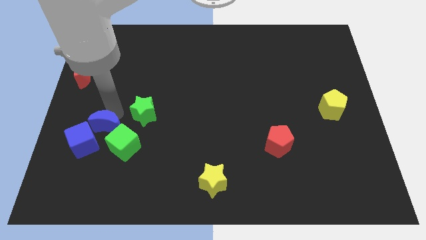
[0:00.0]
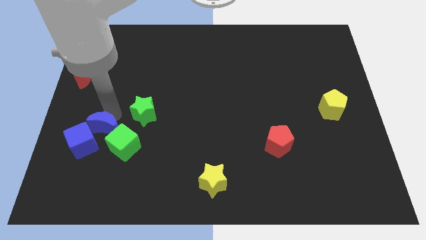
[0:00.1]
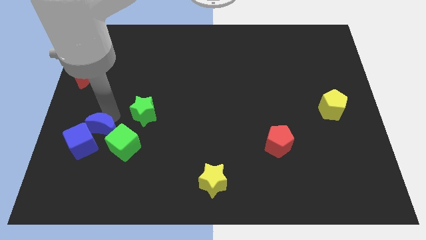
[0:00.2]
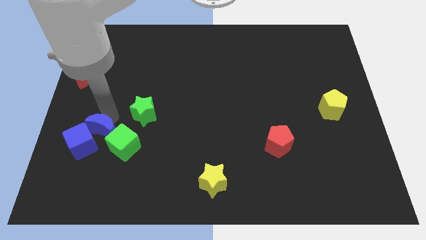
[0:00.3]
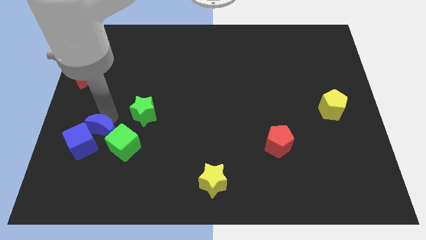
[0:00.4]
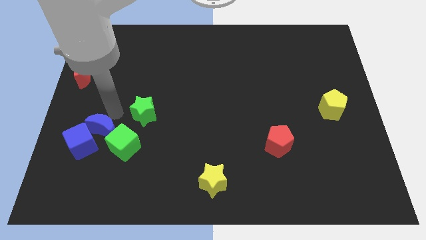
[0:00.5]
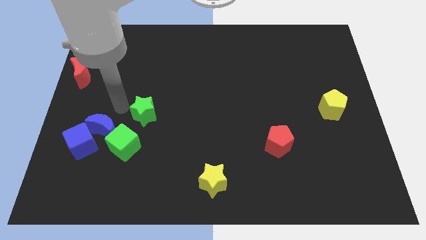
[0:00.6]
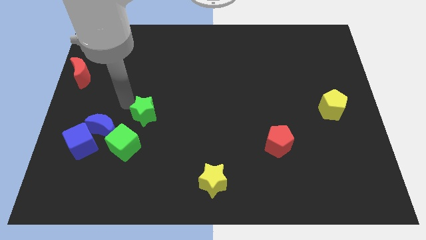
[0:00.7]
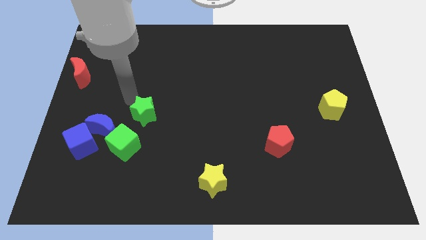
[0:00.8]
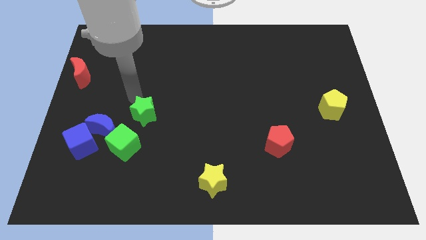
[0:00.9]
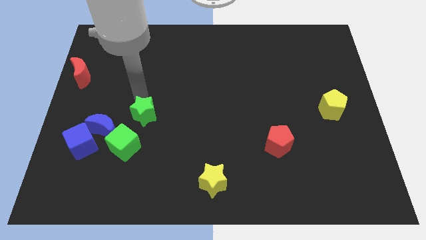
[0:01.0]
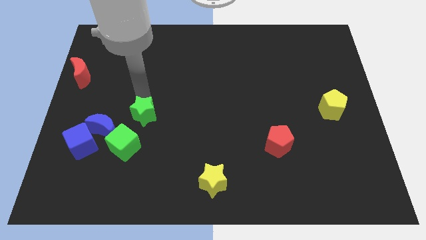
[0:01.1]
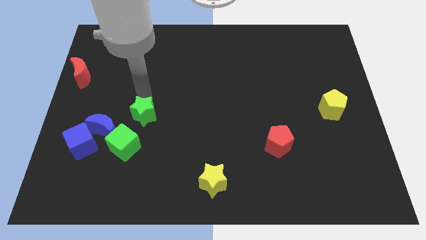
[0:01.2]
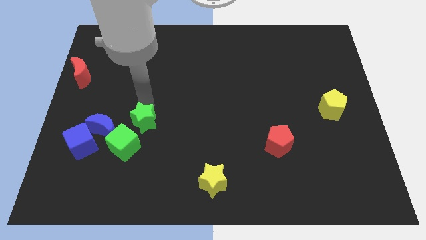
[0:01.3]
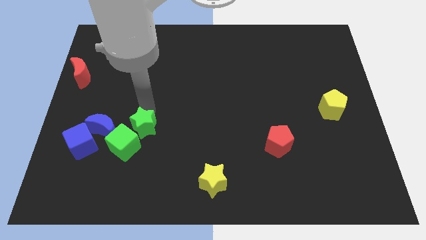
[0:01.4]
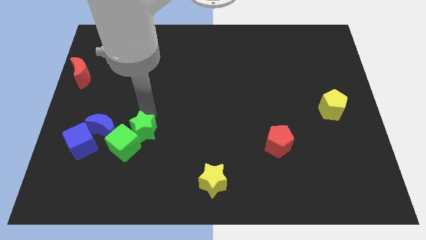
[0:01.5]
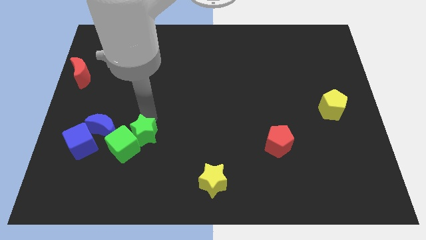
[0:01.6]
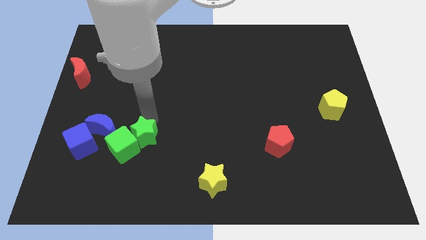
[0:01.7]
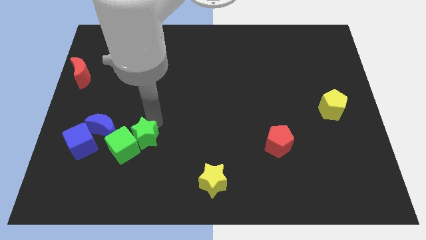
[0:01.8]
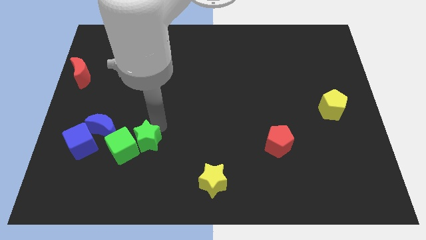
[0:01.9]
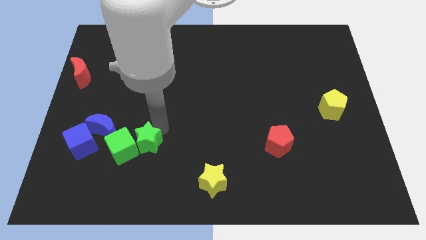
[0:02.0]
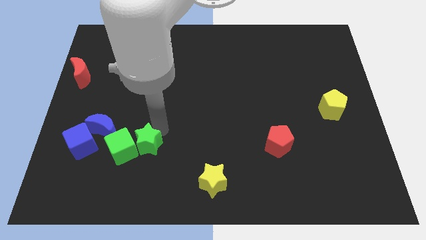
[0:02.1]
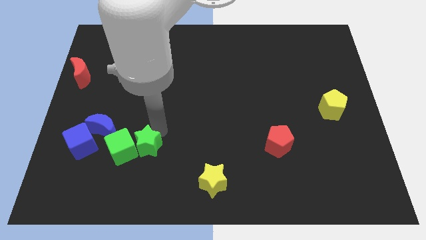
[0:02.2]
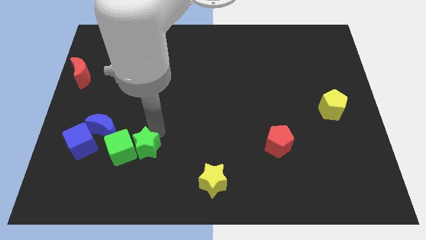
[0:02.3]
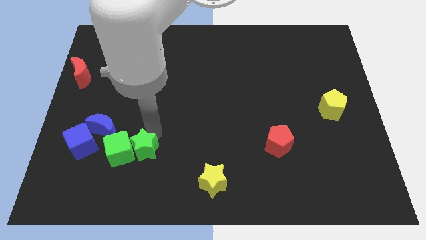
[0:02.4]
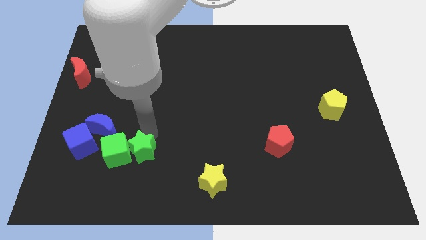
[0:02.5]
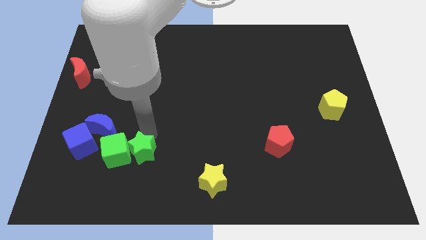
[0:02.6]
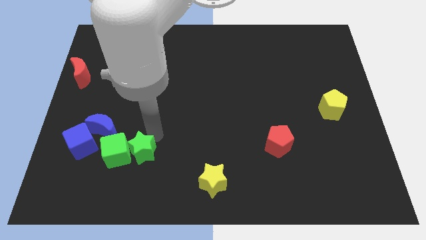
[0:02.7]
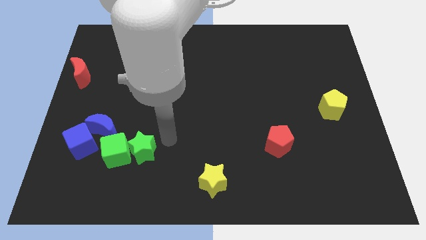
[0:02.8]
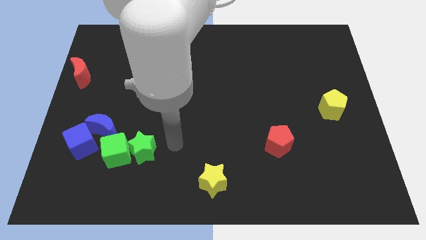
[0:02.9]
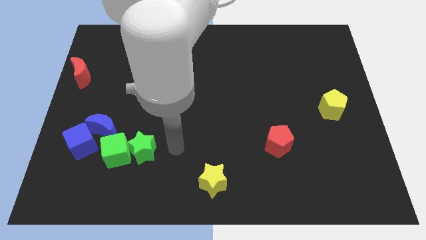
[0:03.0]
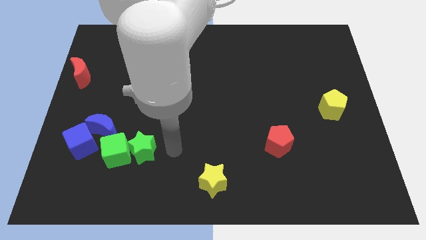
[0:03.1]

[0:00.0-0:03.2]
drag the green star towards the right side of the green cube

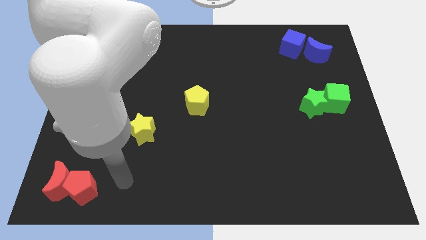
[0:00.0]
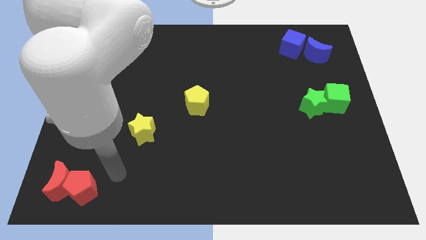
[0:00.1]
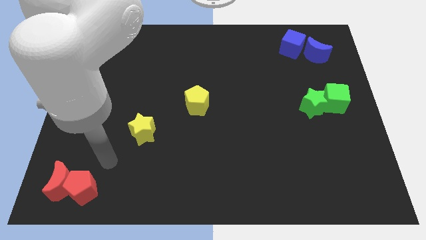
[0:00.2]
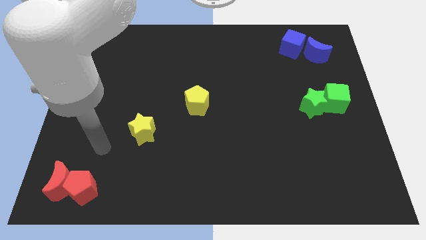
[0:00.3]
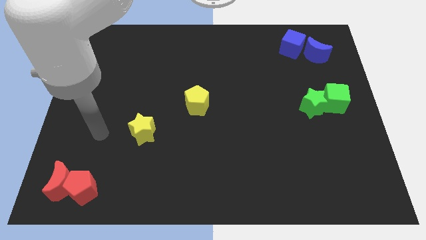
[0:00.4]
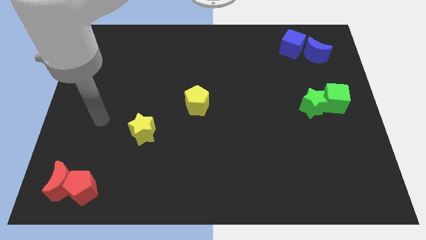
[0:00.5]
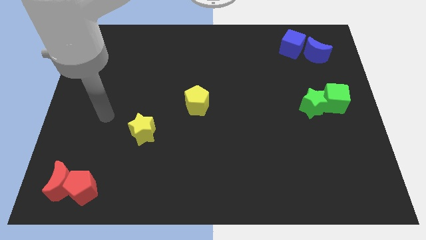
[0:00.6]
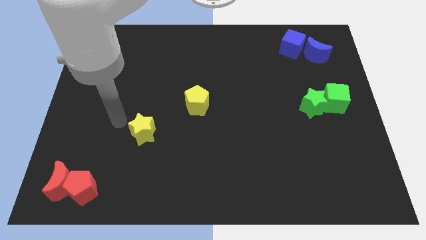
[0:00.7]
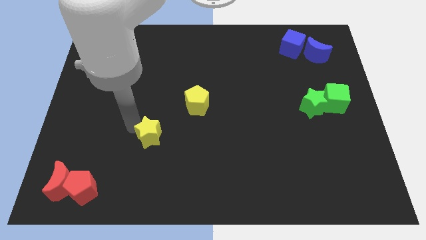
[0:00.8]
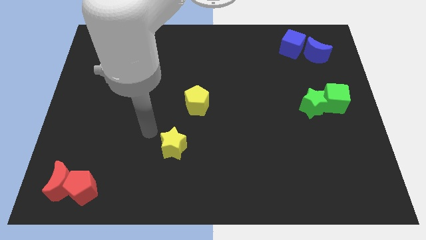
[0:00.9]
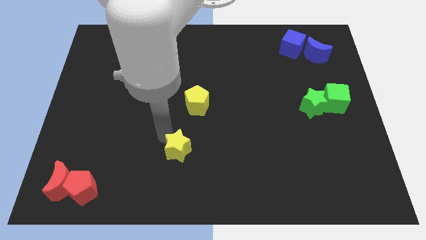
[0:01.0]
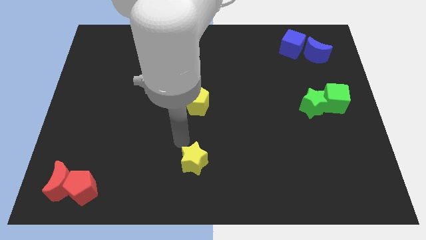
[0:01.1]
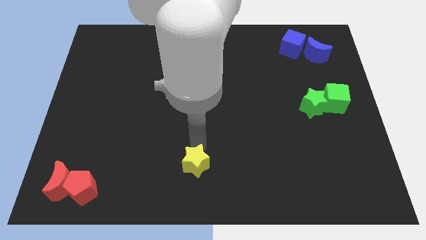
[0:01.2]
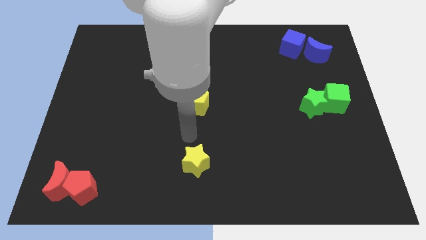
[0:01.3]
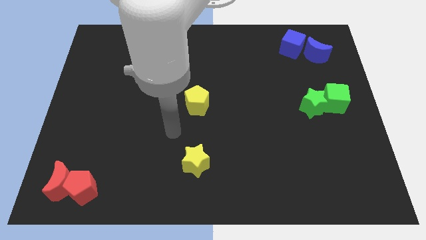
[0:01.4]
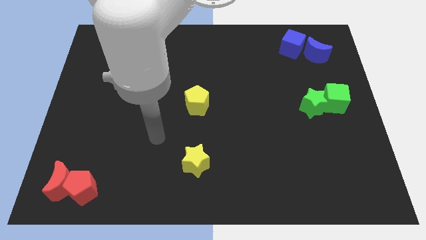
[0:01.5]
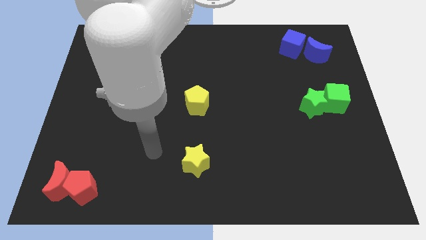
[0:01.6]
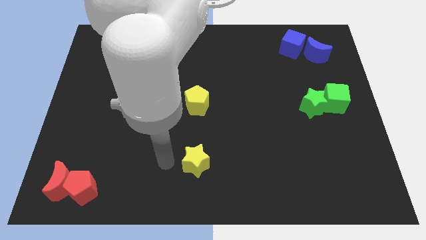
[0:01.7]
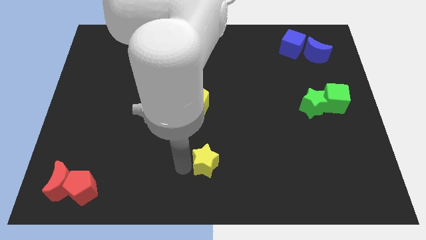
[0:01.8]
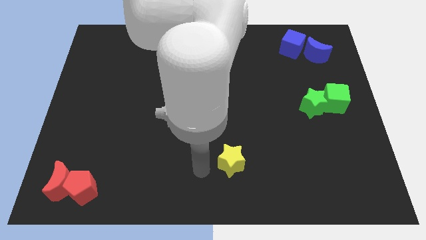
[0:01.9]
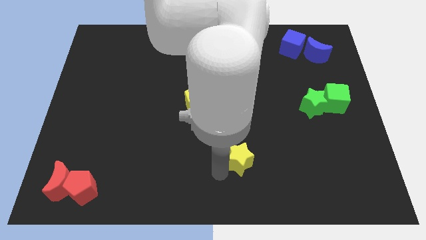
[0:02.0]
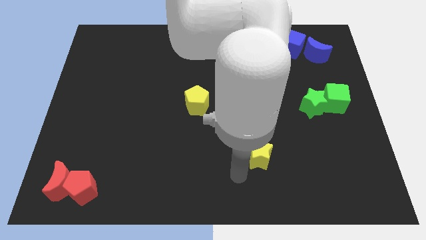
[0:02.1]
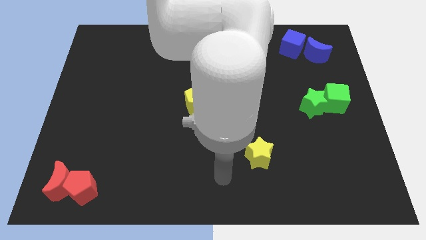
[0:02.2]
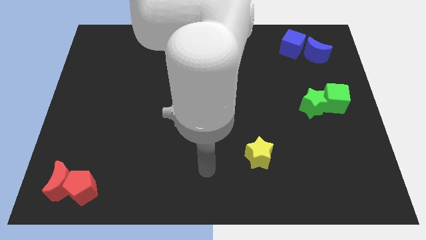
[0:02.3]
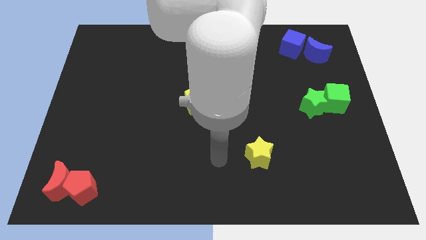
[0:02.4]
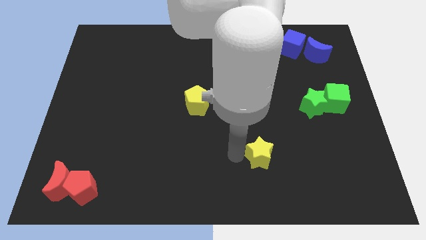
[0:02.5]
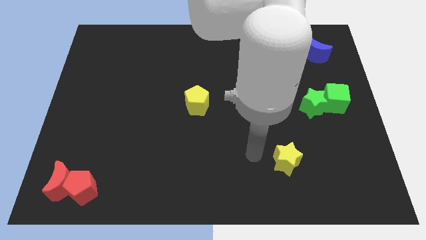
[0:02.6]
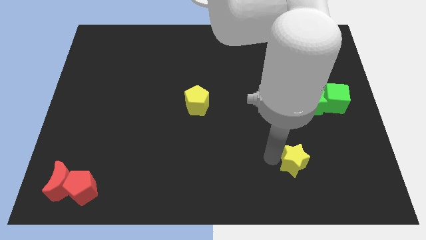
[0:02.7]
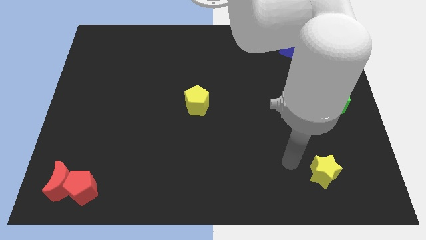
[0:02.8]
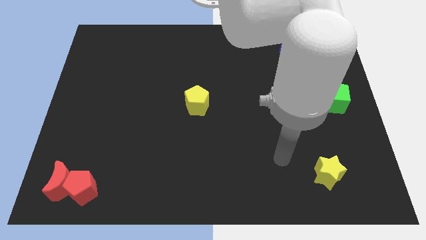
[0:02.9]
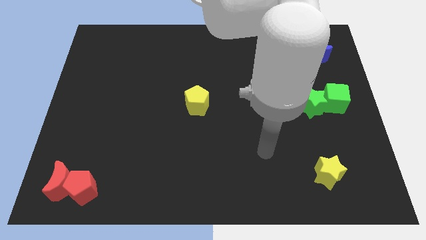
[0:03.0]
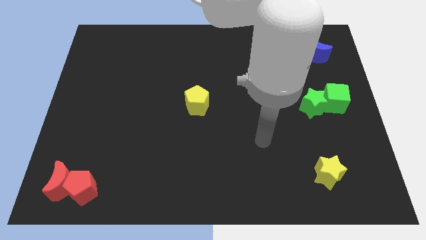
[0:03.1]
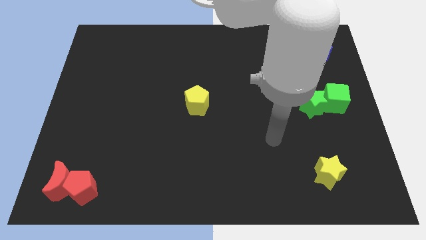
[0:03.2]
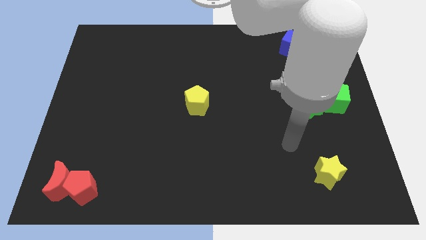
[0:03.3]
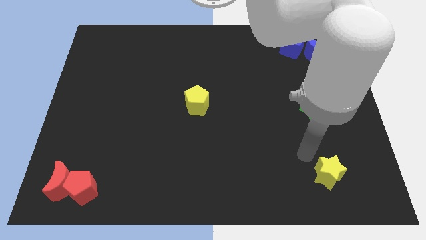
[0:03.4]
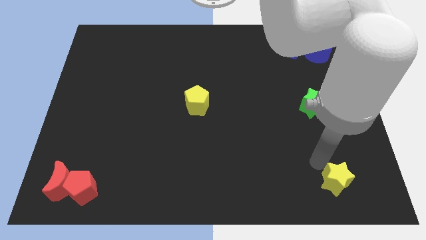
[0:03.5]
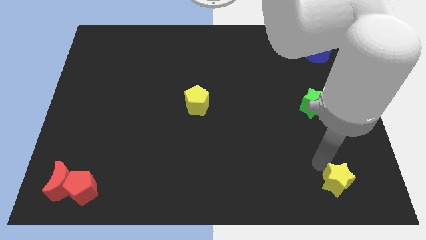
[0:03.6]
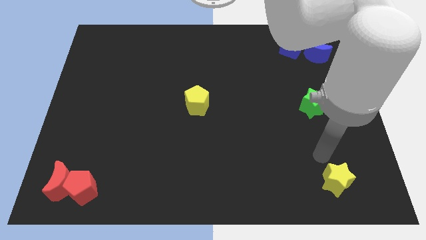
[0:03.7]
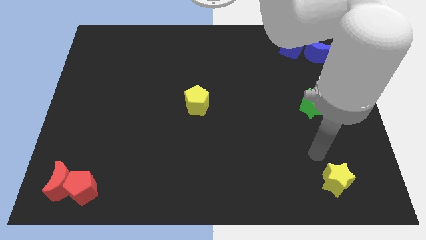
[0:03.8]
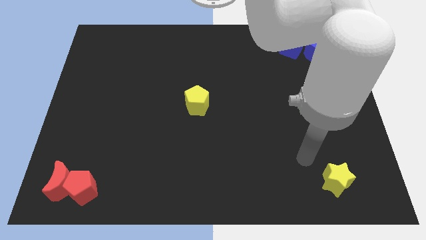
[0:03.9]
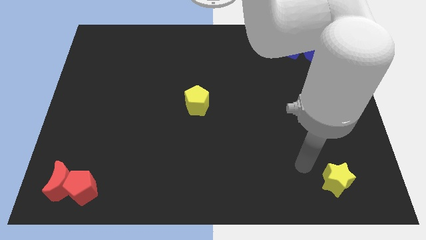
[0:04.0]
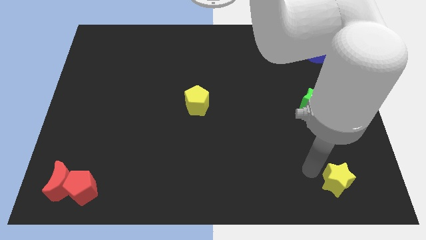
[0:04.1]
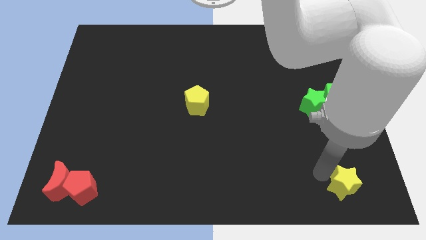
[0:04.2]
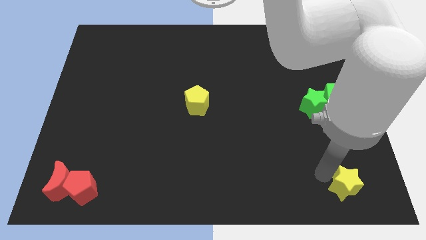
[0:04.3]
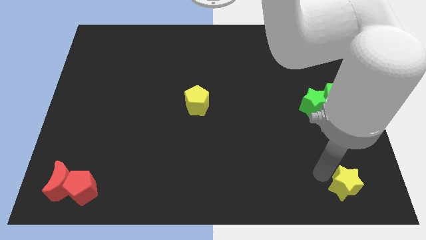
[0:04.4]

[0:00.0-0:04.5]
move the yellow star to the bottom right corner

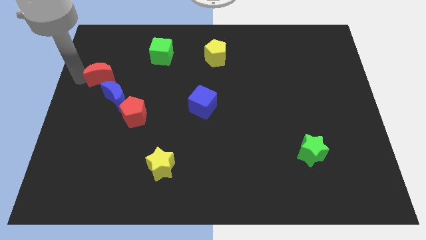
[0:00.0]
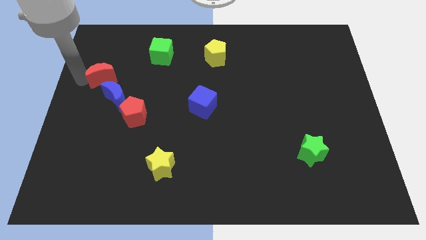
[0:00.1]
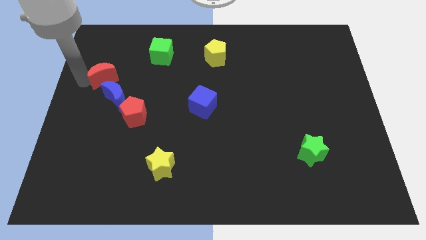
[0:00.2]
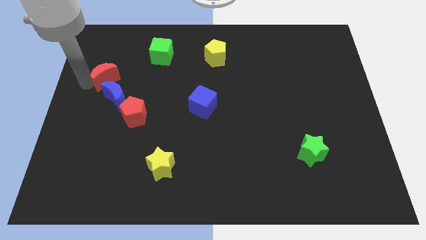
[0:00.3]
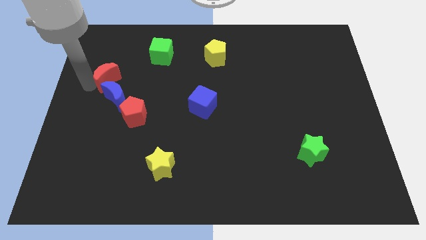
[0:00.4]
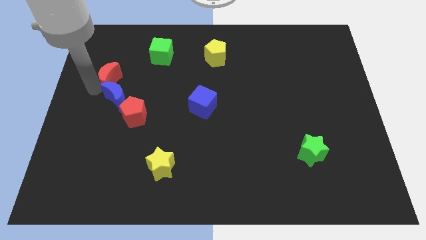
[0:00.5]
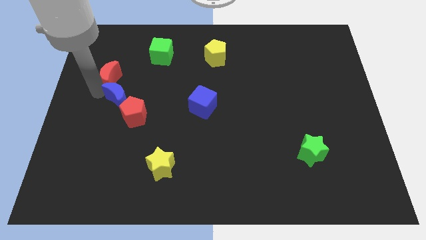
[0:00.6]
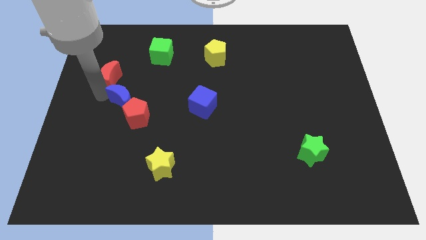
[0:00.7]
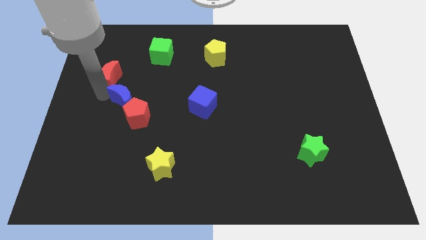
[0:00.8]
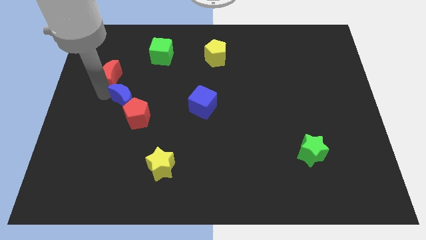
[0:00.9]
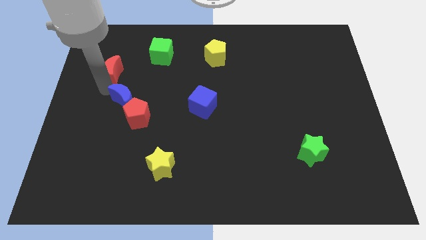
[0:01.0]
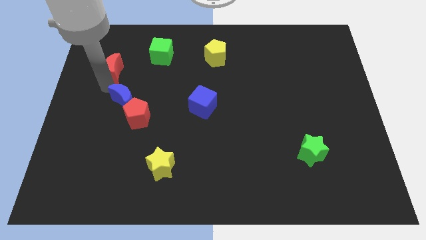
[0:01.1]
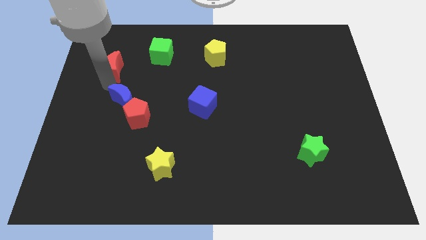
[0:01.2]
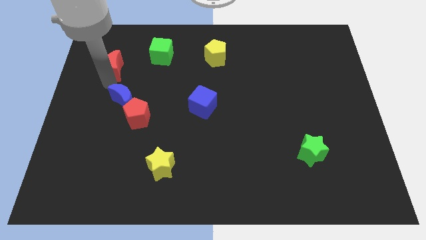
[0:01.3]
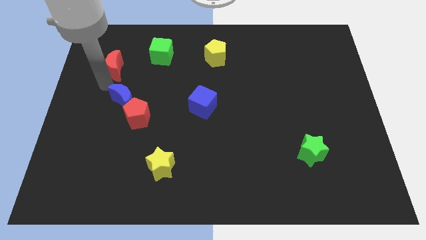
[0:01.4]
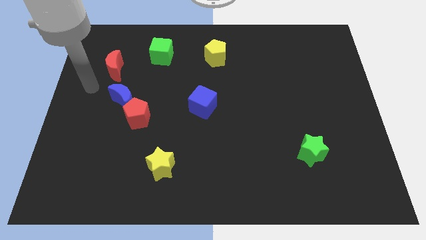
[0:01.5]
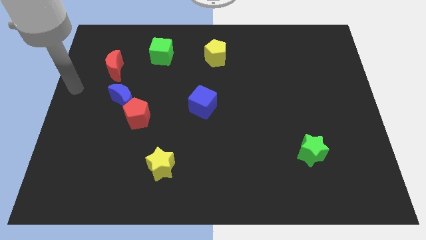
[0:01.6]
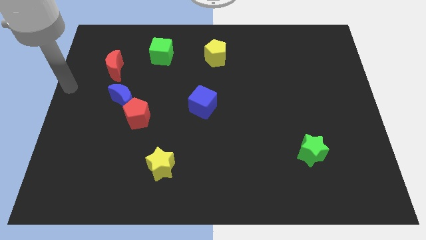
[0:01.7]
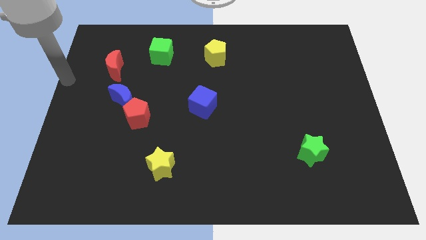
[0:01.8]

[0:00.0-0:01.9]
place the red crescent on top of blue crescent
